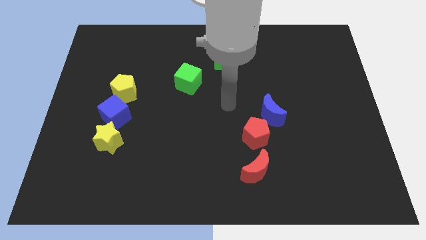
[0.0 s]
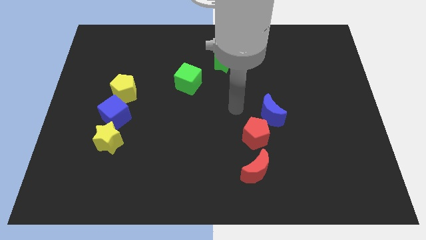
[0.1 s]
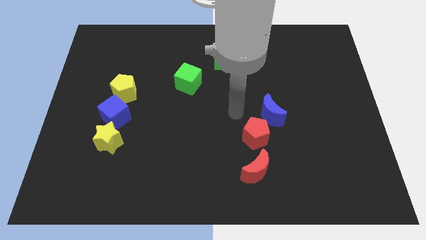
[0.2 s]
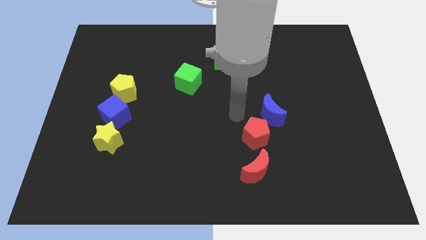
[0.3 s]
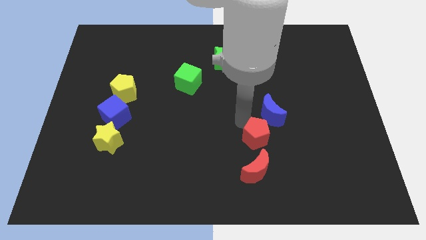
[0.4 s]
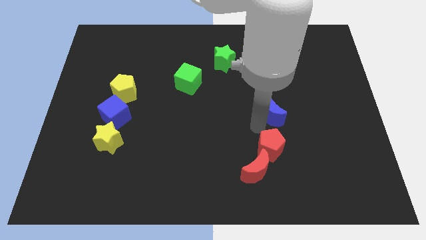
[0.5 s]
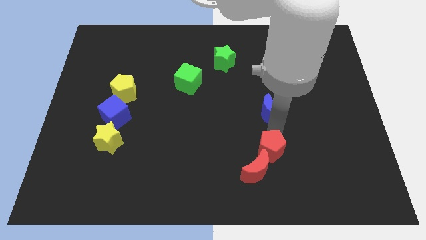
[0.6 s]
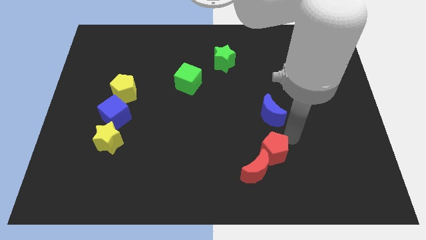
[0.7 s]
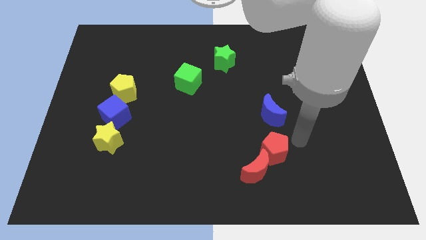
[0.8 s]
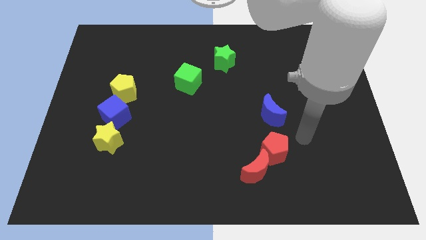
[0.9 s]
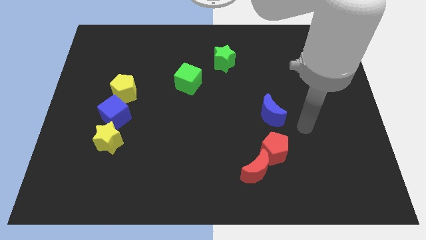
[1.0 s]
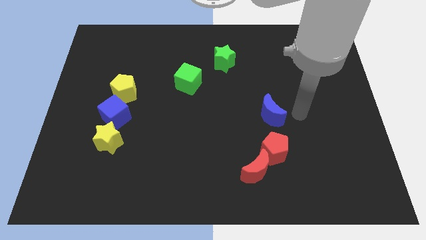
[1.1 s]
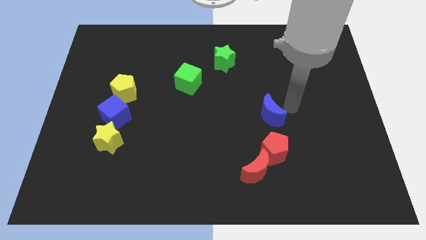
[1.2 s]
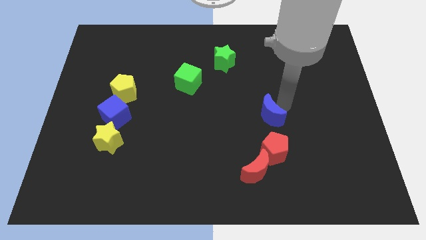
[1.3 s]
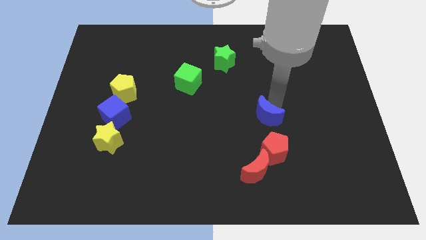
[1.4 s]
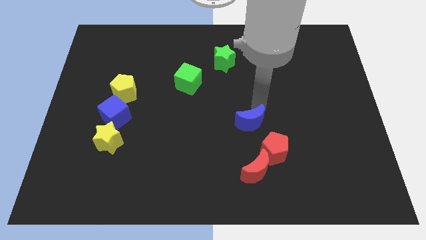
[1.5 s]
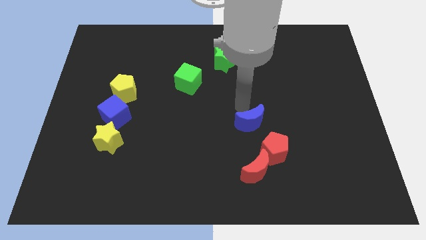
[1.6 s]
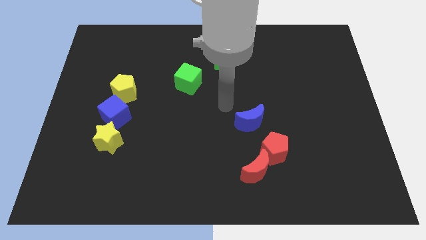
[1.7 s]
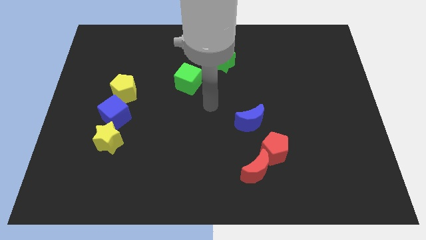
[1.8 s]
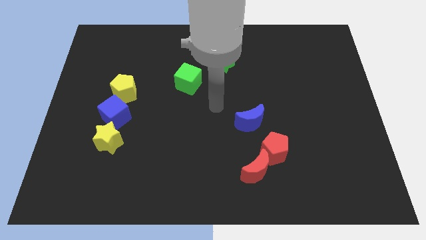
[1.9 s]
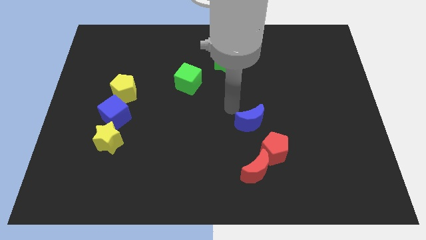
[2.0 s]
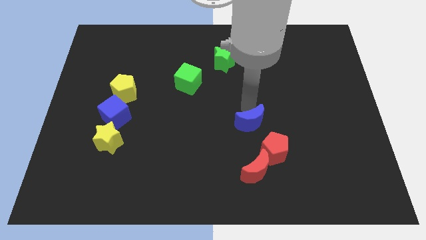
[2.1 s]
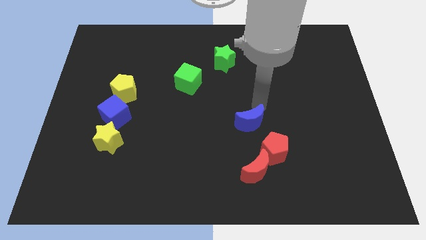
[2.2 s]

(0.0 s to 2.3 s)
slightly move the red pentagon close to the red moon

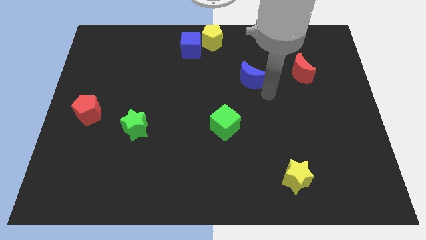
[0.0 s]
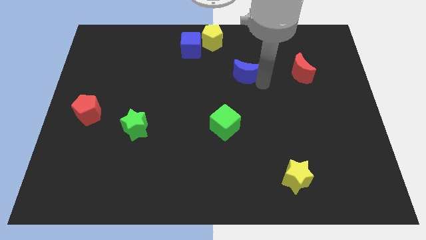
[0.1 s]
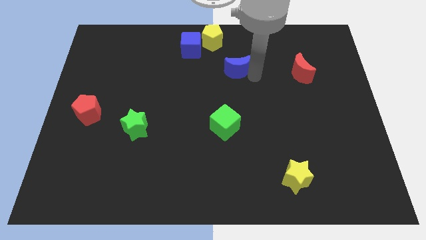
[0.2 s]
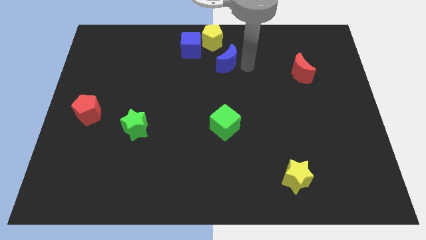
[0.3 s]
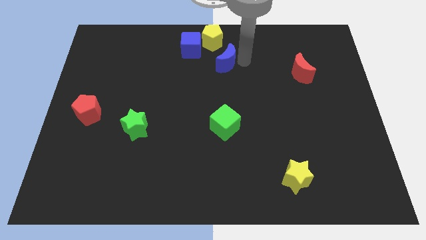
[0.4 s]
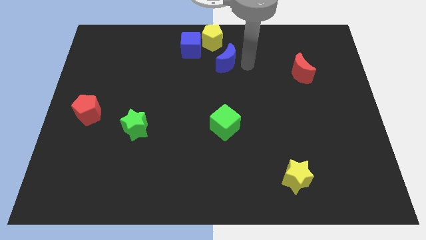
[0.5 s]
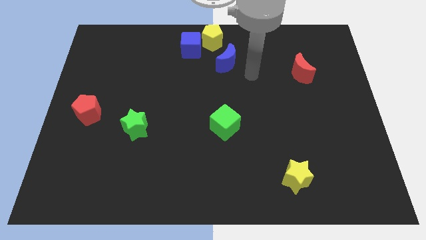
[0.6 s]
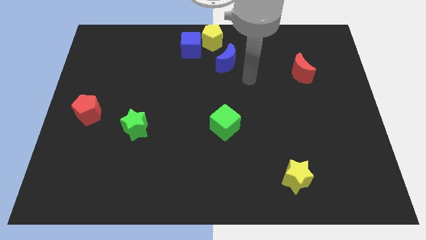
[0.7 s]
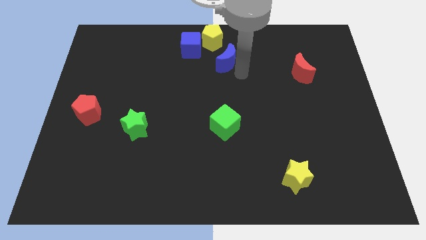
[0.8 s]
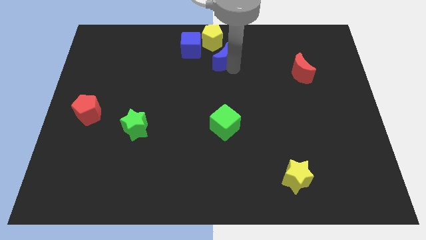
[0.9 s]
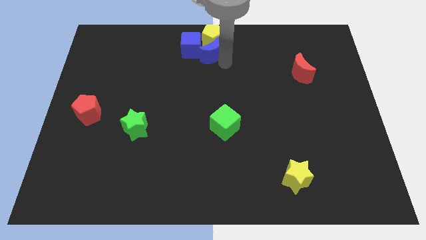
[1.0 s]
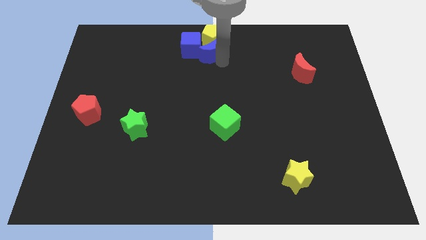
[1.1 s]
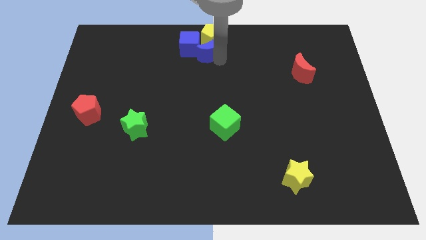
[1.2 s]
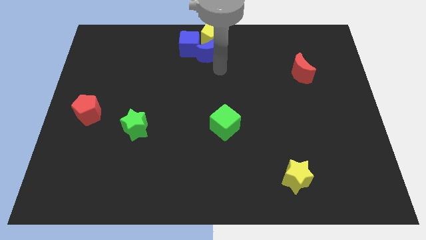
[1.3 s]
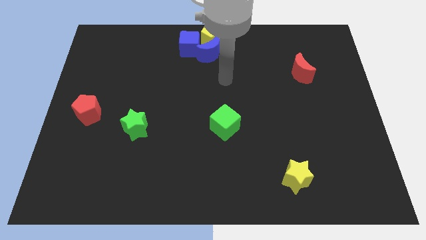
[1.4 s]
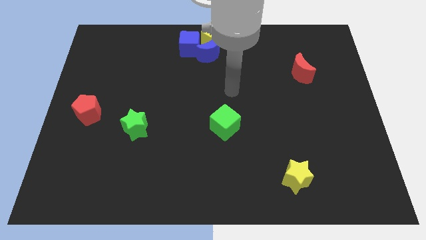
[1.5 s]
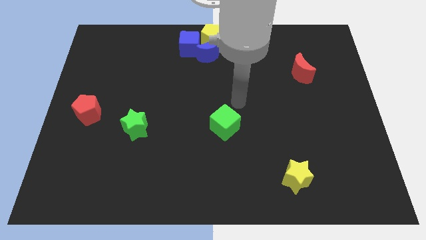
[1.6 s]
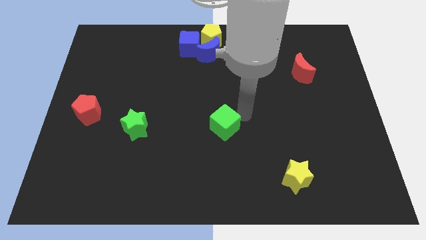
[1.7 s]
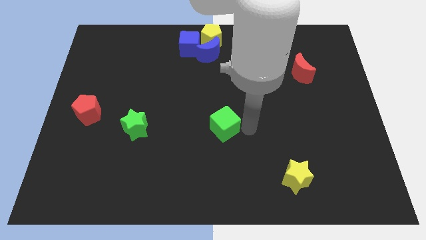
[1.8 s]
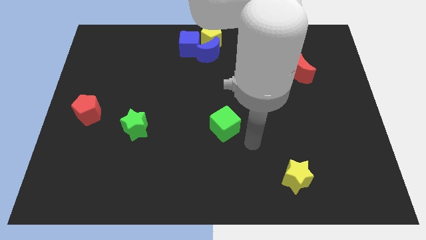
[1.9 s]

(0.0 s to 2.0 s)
push the blue moon close to the blue cube and yellow pentagon

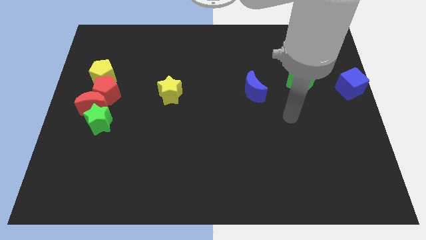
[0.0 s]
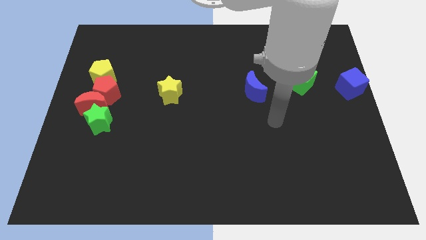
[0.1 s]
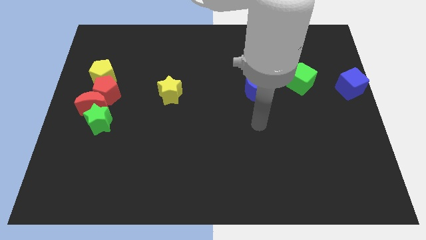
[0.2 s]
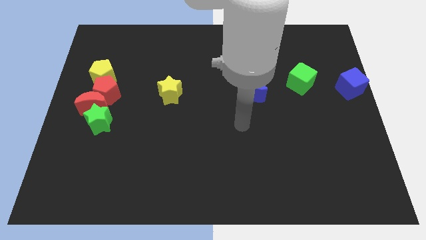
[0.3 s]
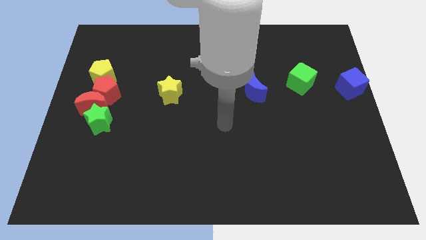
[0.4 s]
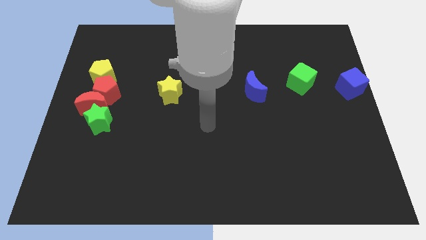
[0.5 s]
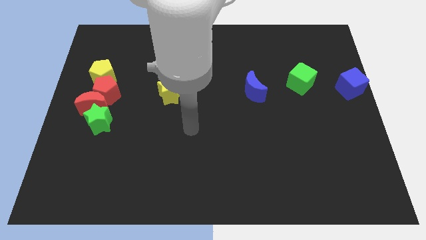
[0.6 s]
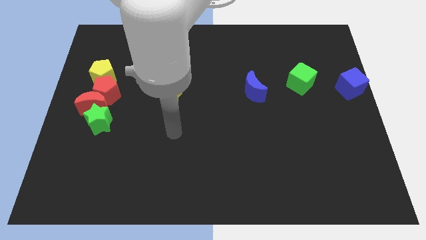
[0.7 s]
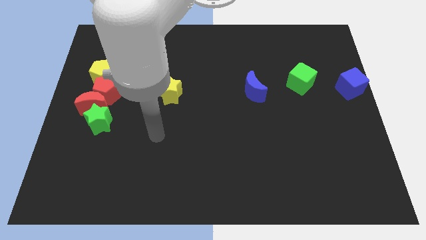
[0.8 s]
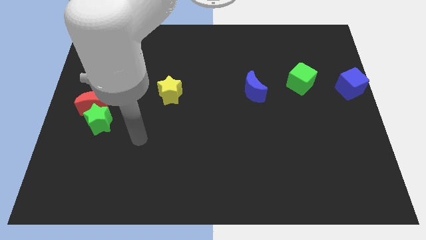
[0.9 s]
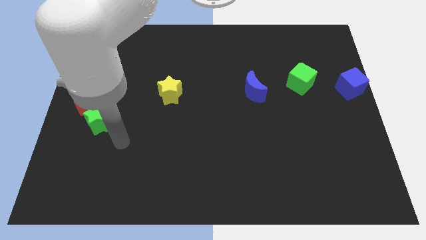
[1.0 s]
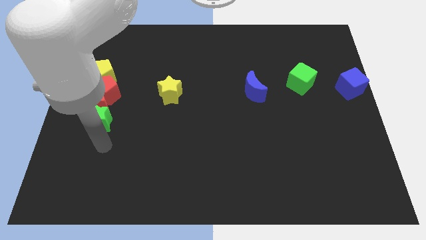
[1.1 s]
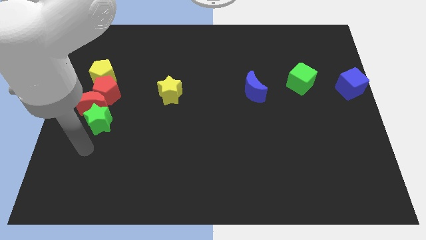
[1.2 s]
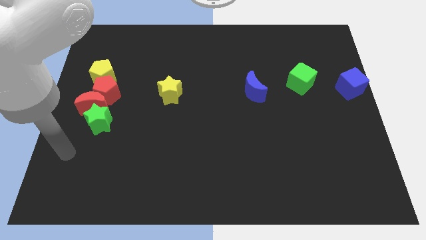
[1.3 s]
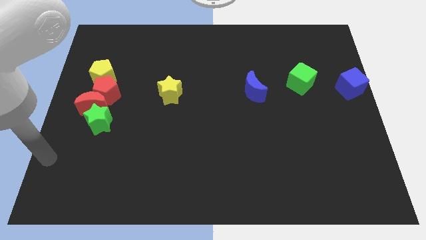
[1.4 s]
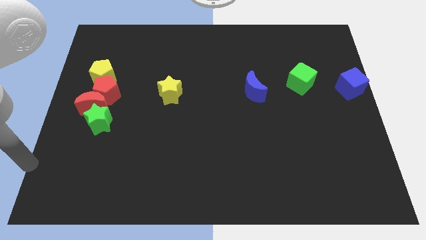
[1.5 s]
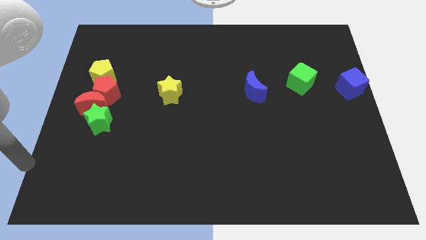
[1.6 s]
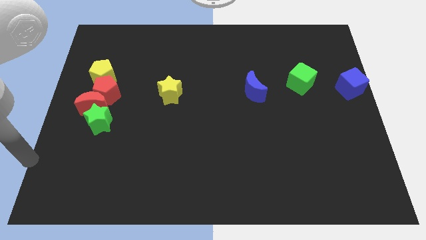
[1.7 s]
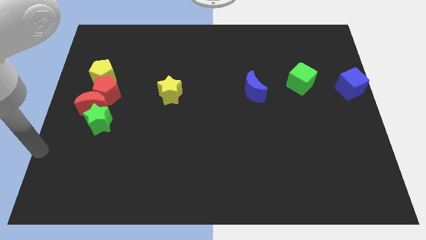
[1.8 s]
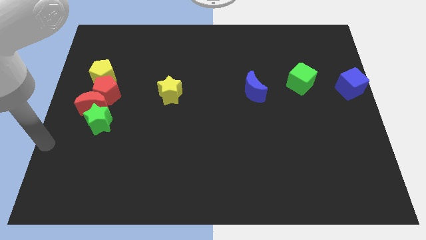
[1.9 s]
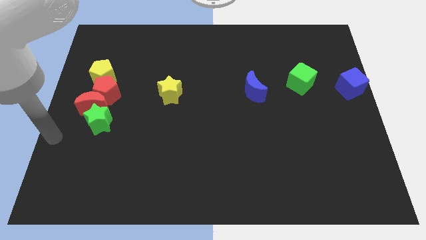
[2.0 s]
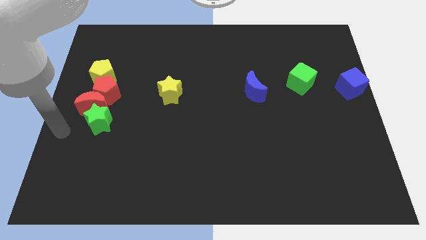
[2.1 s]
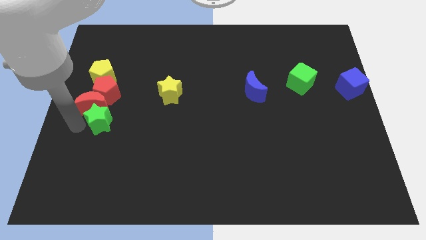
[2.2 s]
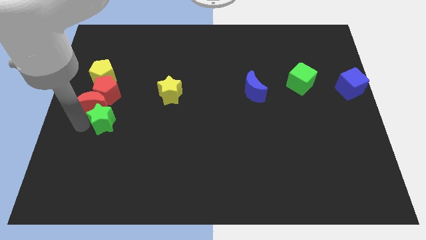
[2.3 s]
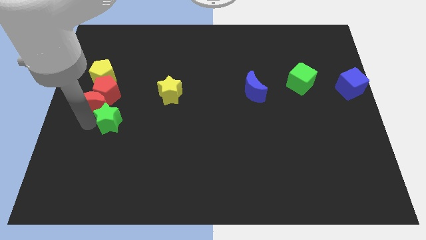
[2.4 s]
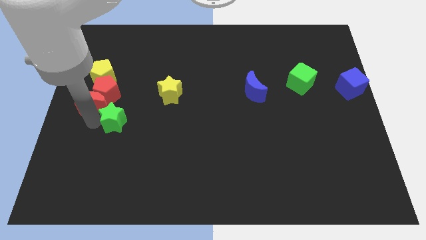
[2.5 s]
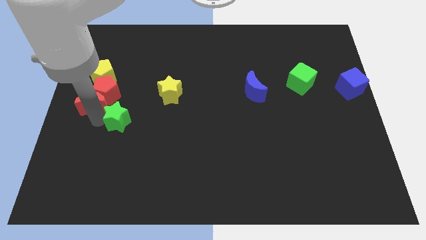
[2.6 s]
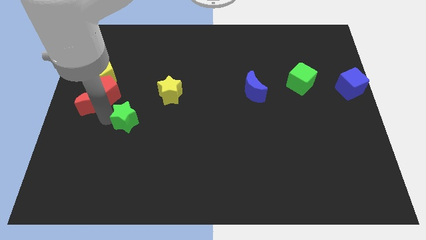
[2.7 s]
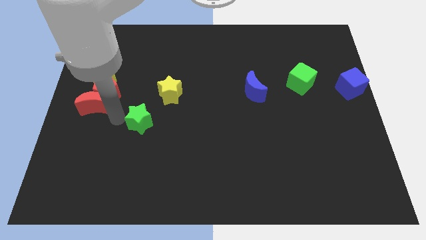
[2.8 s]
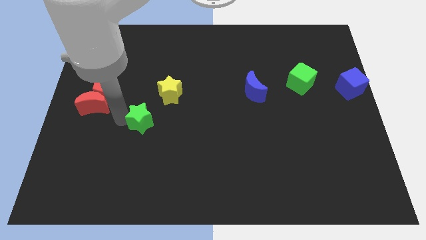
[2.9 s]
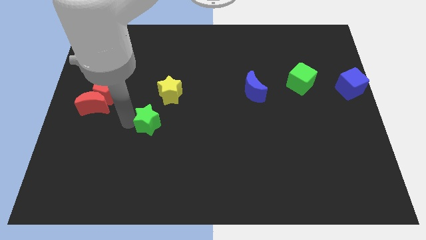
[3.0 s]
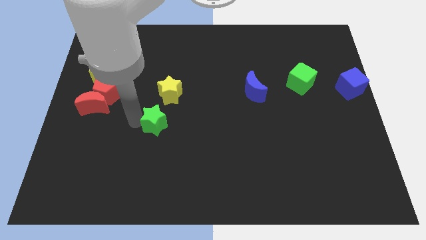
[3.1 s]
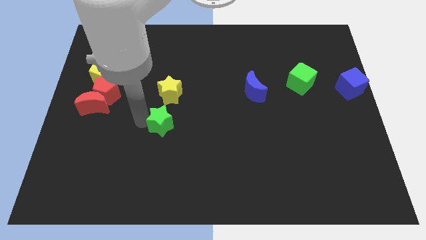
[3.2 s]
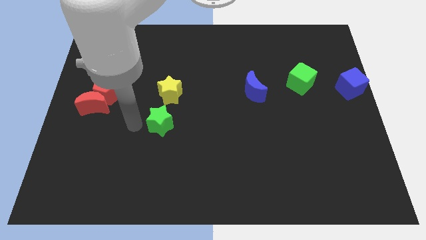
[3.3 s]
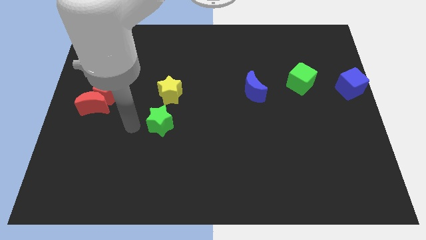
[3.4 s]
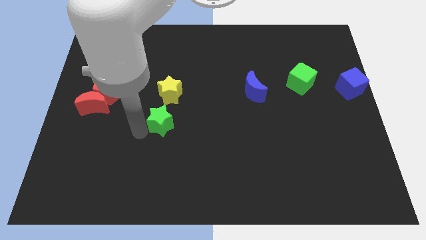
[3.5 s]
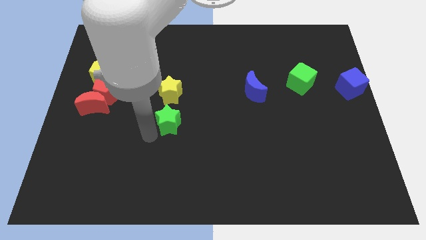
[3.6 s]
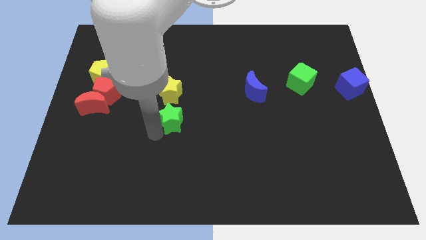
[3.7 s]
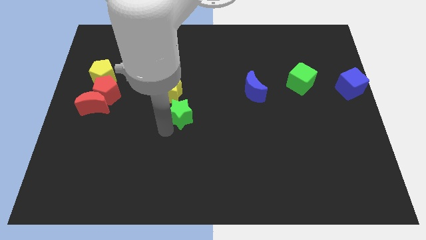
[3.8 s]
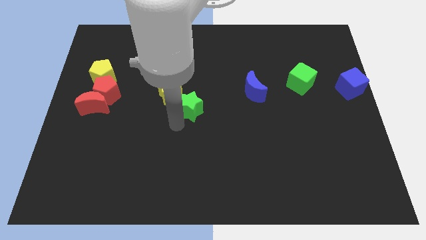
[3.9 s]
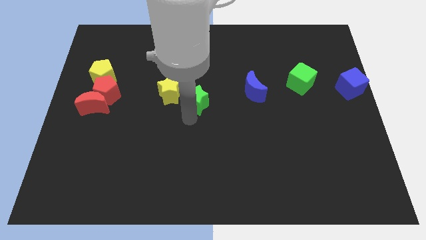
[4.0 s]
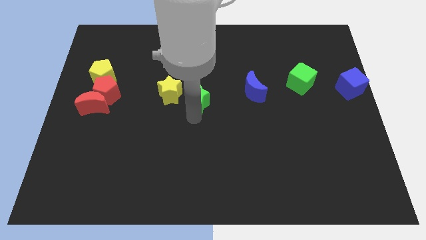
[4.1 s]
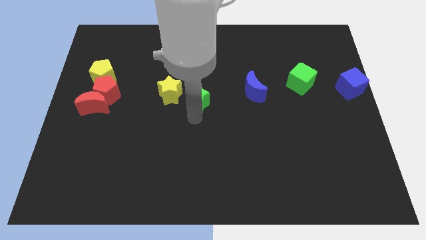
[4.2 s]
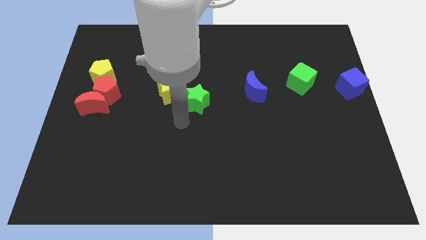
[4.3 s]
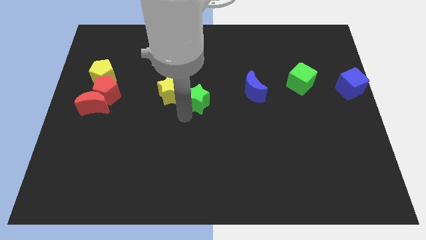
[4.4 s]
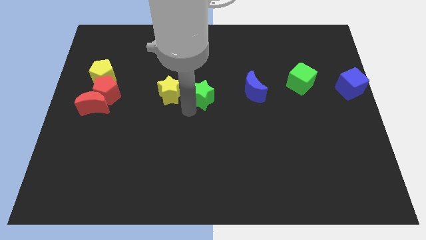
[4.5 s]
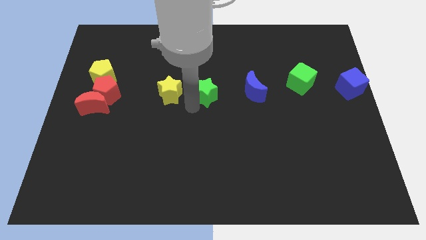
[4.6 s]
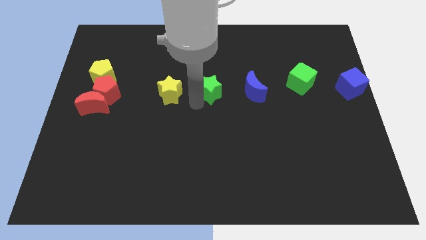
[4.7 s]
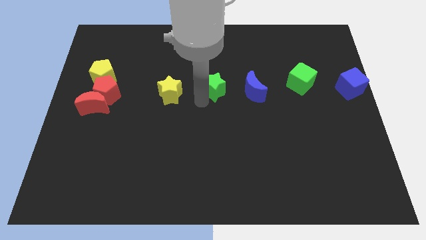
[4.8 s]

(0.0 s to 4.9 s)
place the green star in between the blue moon and yellow star
